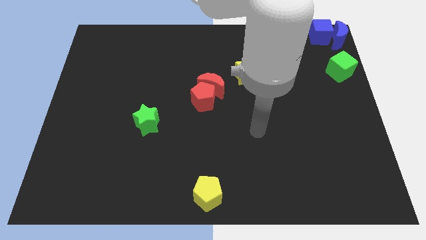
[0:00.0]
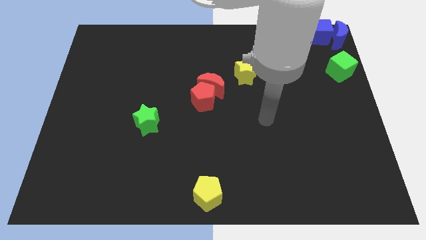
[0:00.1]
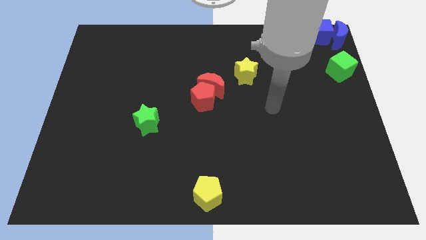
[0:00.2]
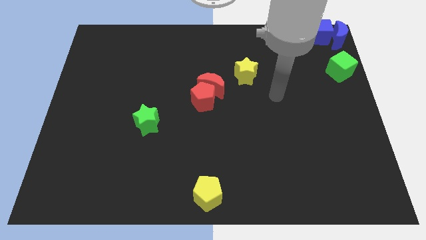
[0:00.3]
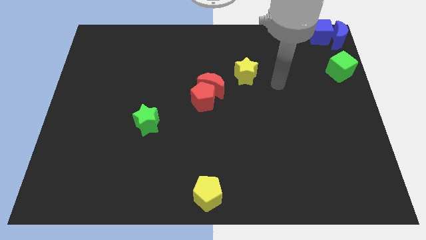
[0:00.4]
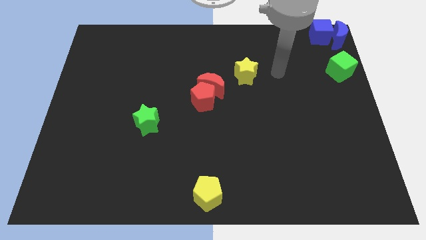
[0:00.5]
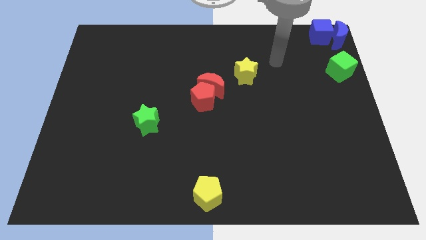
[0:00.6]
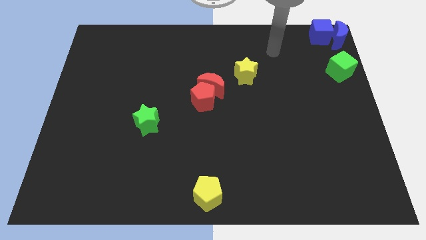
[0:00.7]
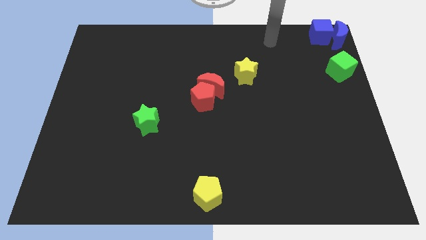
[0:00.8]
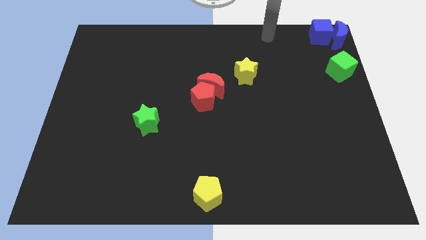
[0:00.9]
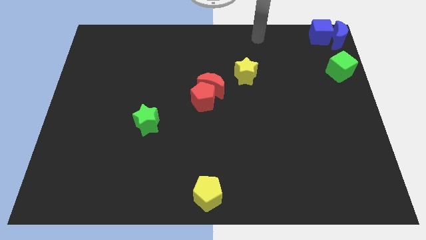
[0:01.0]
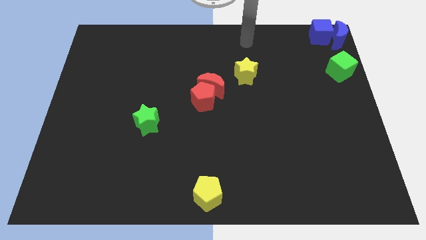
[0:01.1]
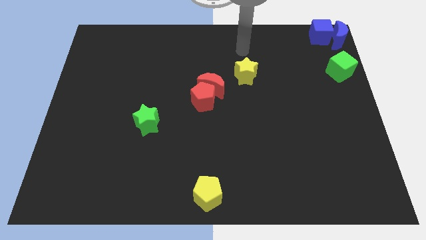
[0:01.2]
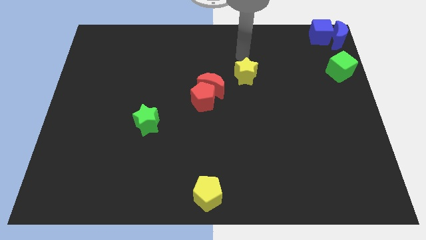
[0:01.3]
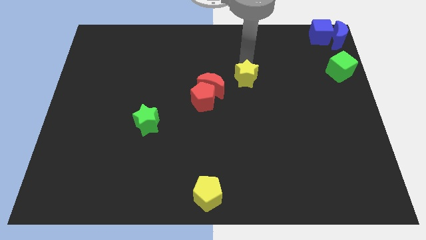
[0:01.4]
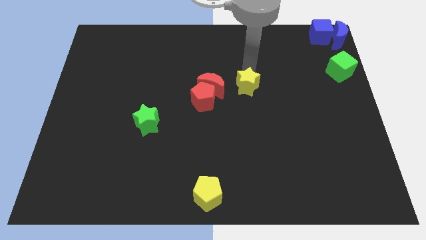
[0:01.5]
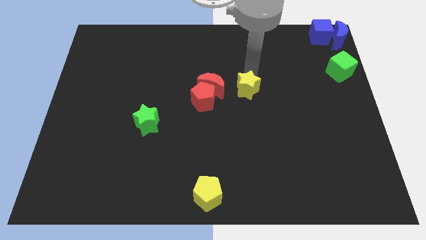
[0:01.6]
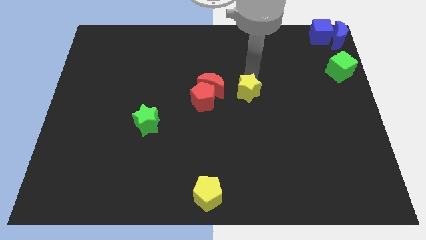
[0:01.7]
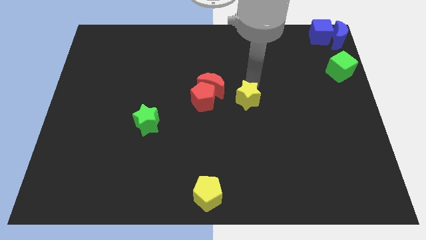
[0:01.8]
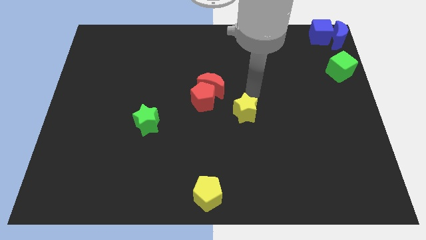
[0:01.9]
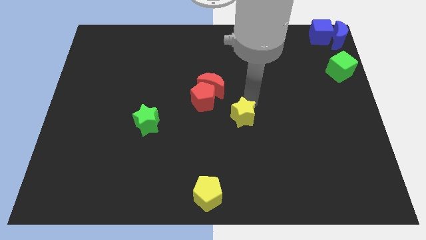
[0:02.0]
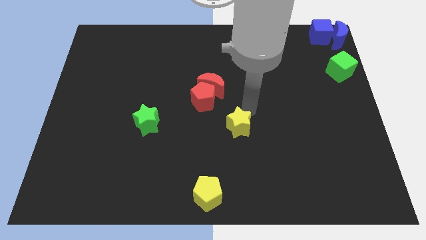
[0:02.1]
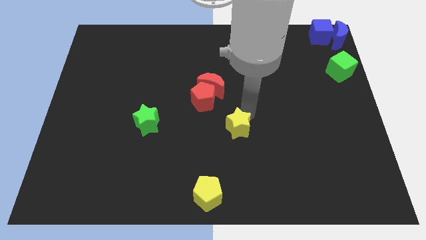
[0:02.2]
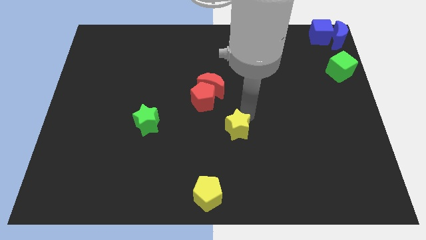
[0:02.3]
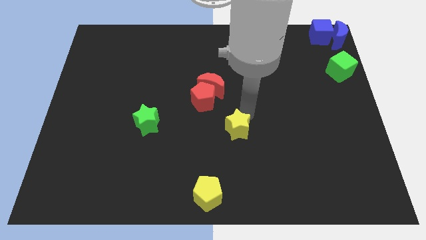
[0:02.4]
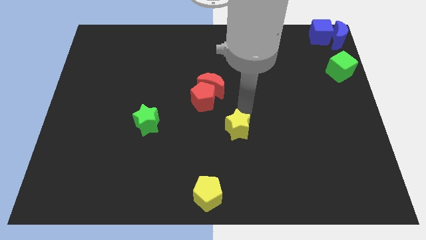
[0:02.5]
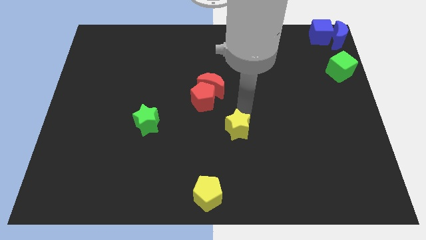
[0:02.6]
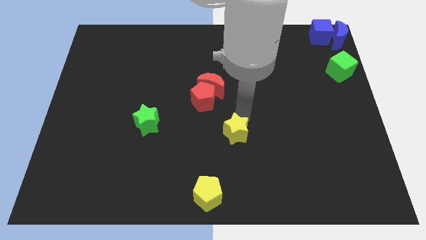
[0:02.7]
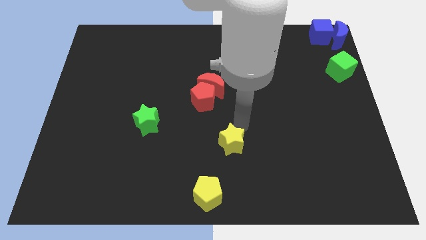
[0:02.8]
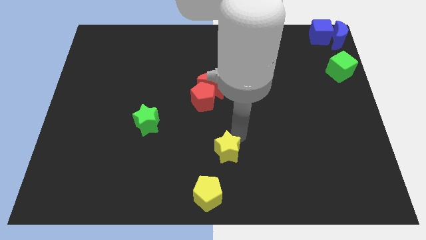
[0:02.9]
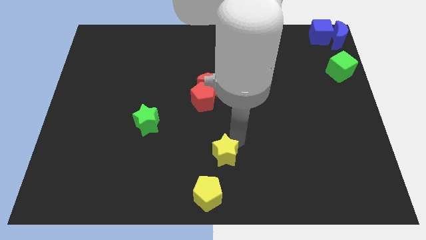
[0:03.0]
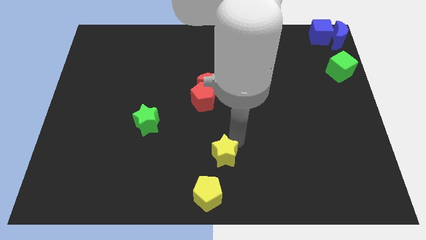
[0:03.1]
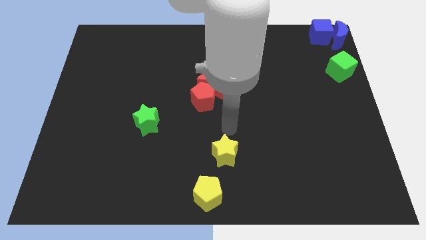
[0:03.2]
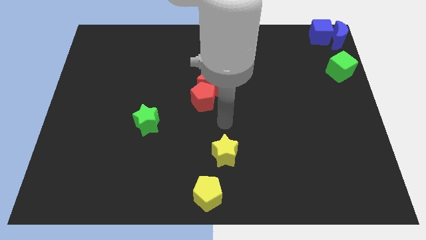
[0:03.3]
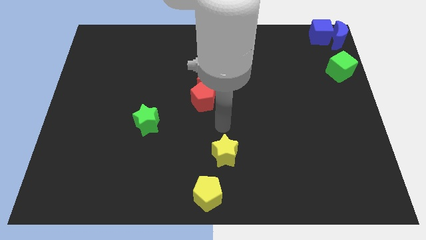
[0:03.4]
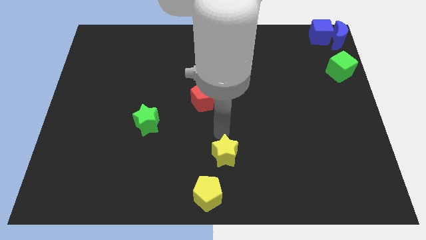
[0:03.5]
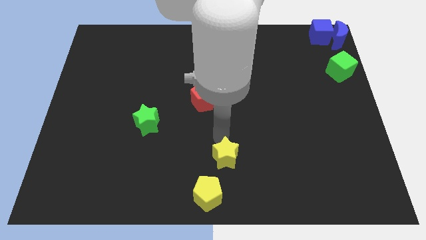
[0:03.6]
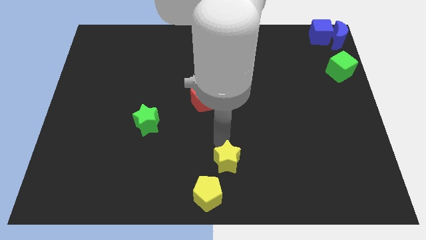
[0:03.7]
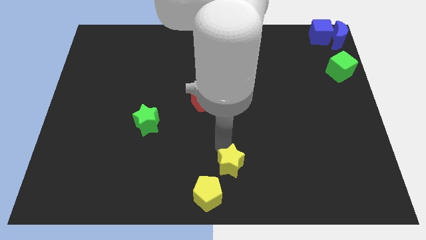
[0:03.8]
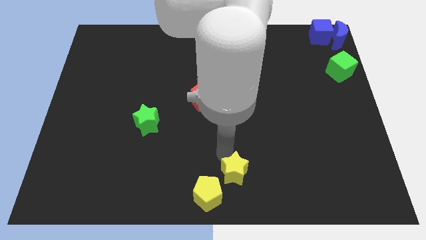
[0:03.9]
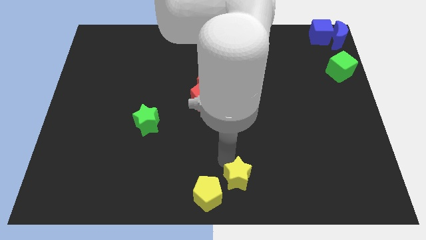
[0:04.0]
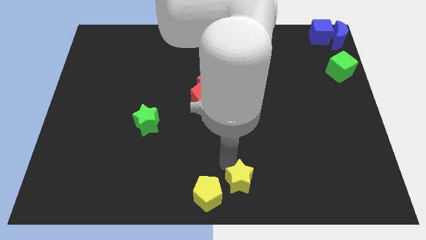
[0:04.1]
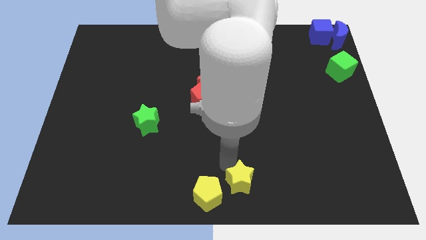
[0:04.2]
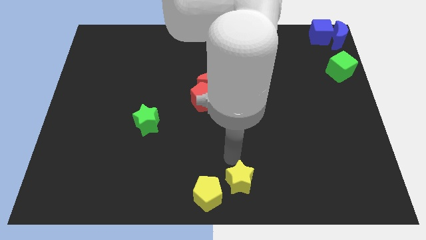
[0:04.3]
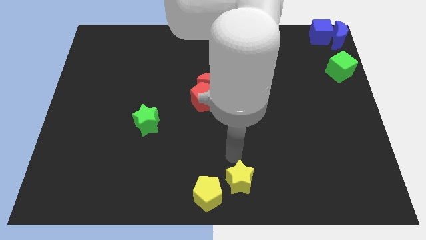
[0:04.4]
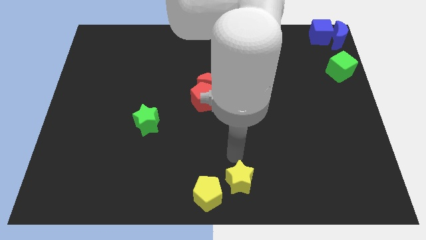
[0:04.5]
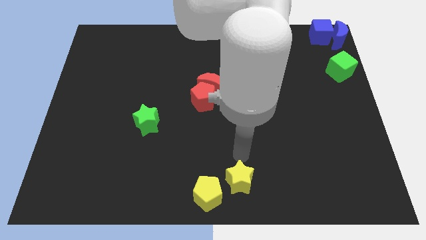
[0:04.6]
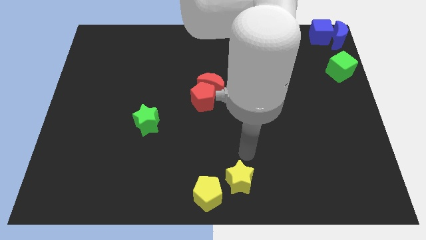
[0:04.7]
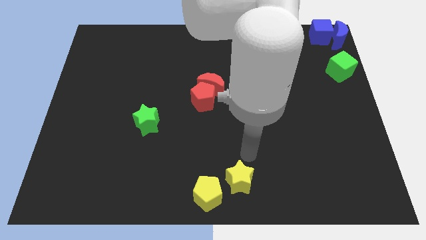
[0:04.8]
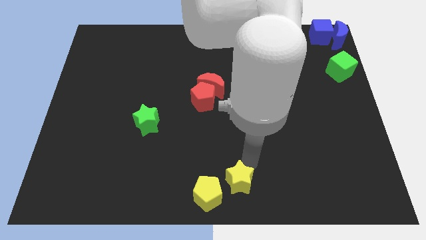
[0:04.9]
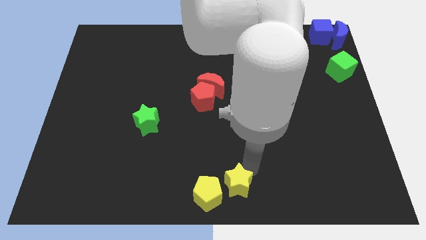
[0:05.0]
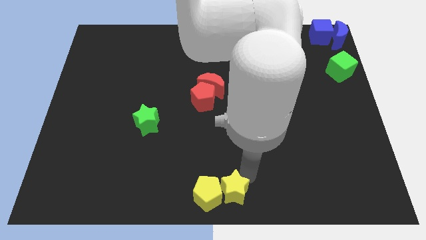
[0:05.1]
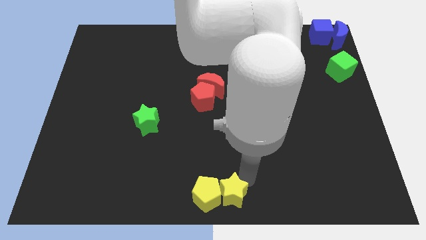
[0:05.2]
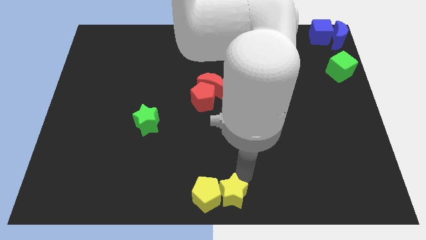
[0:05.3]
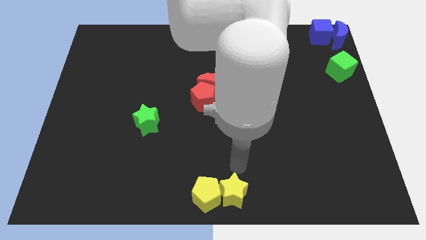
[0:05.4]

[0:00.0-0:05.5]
put the yellow star parallel right to the yellow pentagon

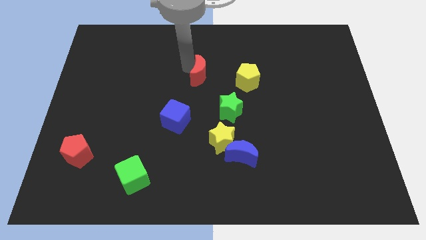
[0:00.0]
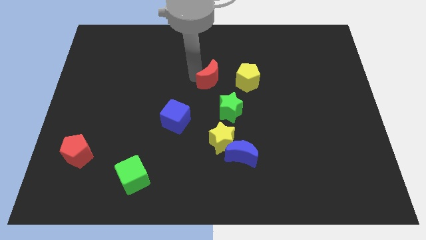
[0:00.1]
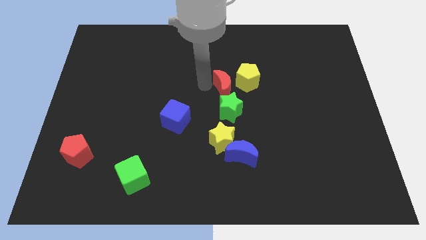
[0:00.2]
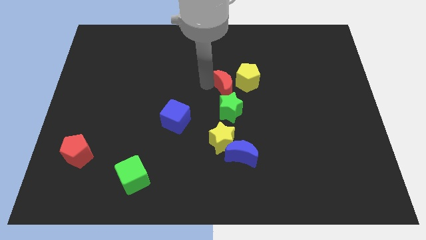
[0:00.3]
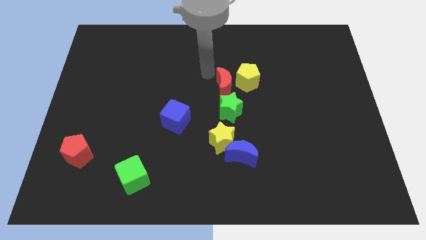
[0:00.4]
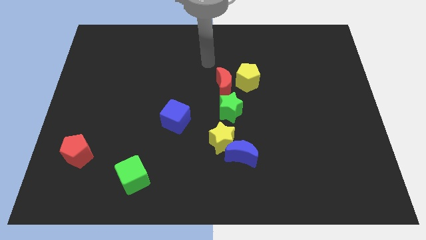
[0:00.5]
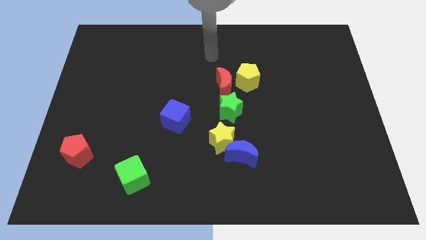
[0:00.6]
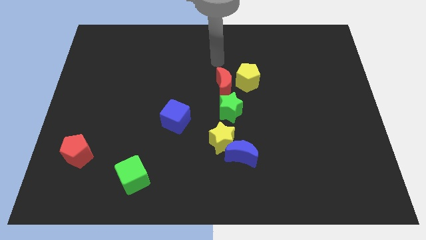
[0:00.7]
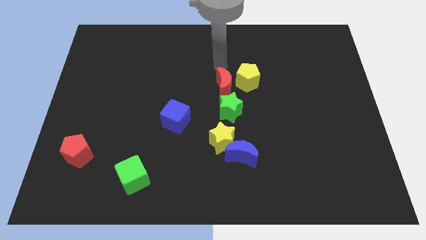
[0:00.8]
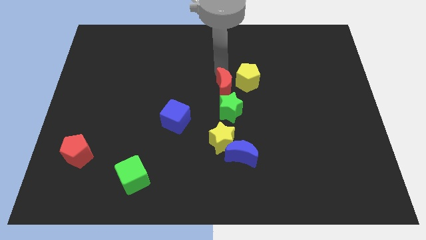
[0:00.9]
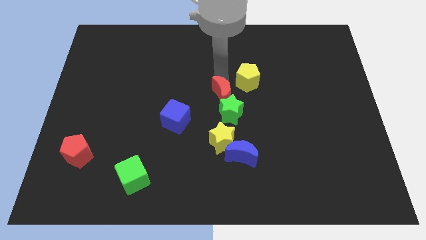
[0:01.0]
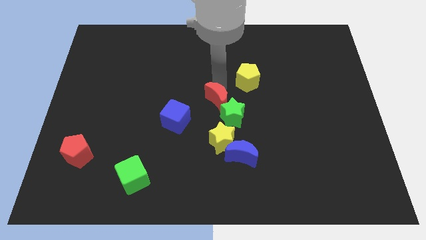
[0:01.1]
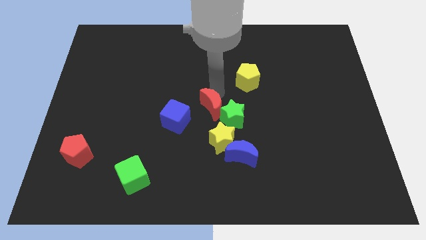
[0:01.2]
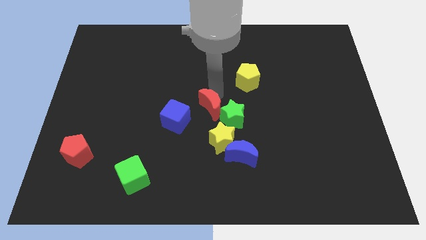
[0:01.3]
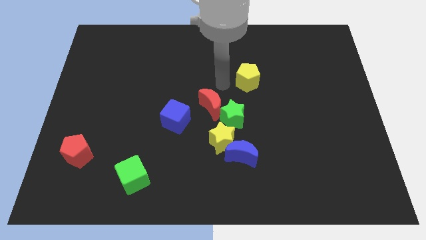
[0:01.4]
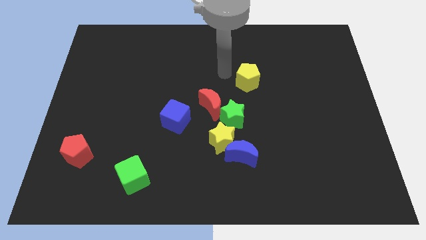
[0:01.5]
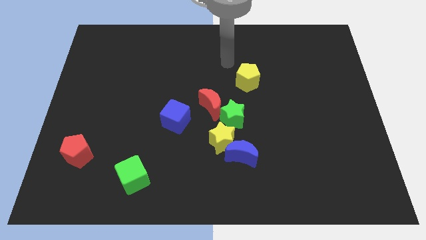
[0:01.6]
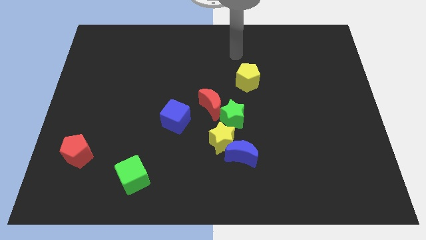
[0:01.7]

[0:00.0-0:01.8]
push the red crescent into the green star

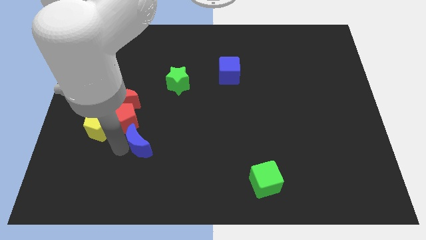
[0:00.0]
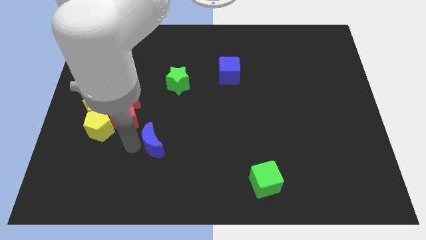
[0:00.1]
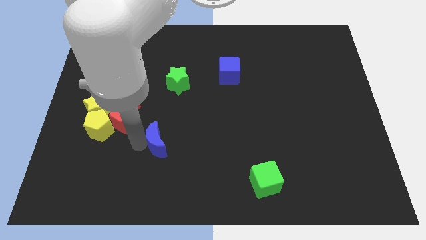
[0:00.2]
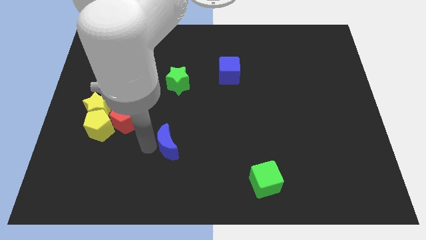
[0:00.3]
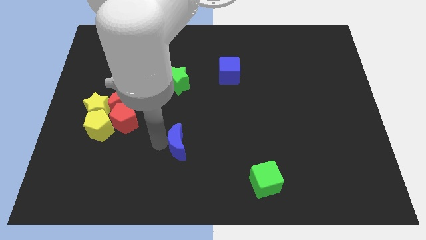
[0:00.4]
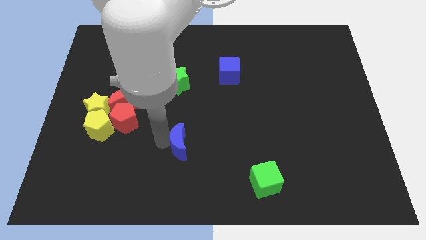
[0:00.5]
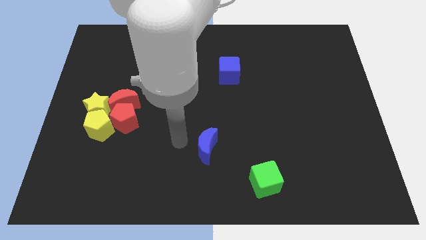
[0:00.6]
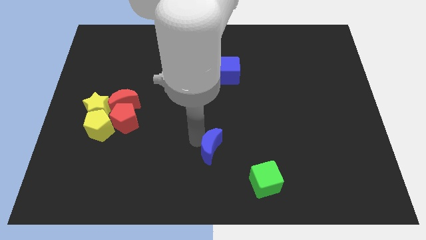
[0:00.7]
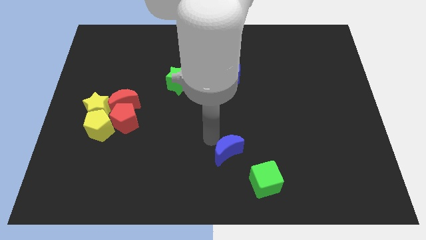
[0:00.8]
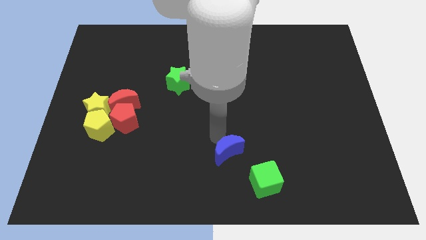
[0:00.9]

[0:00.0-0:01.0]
push the blue moon towards the green cube

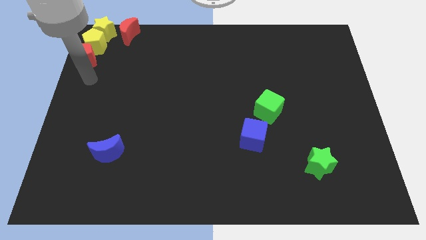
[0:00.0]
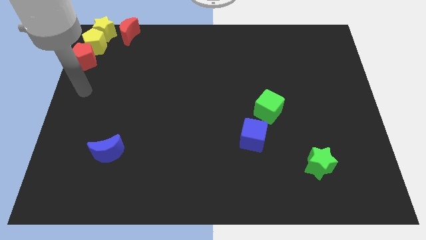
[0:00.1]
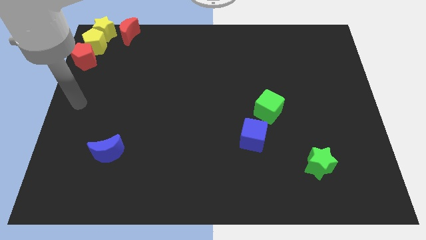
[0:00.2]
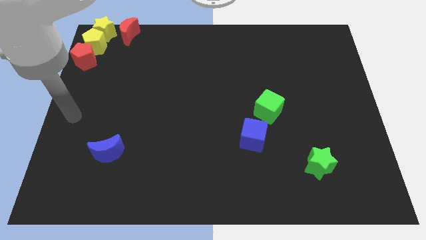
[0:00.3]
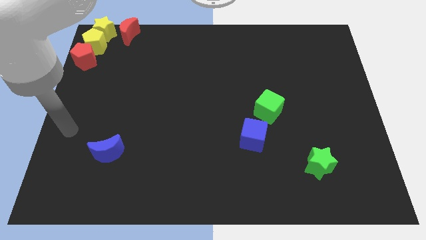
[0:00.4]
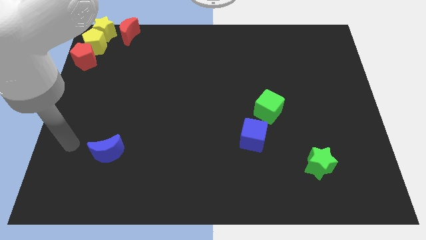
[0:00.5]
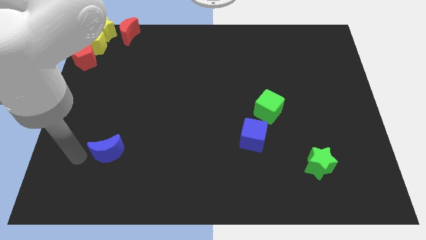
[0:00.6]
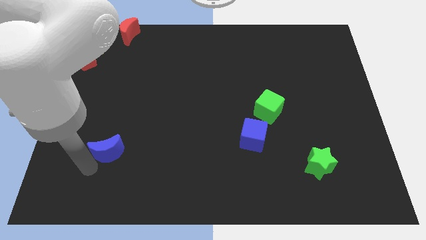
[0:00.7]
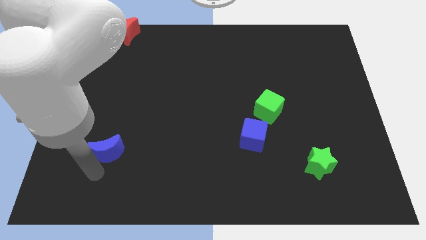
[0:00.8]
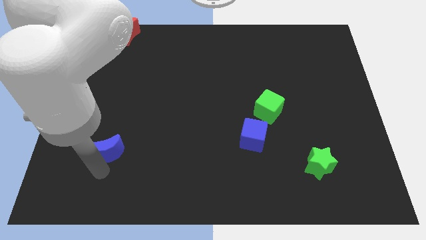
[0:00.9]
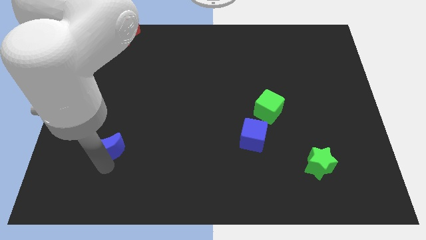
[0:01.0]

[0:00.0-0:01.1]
point the arm below the blue crescent
